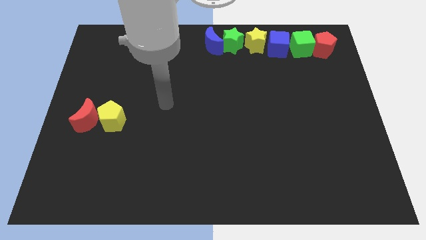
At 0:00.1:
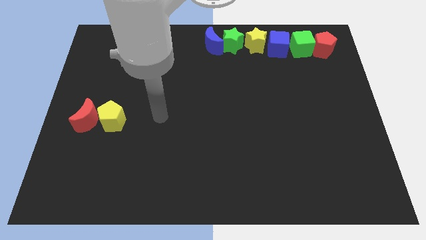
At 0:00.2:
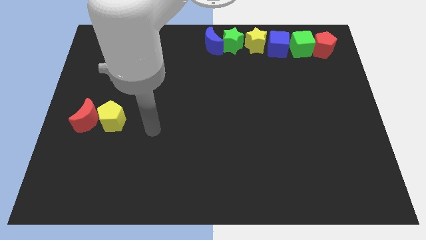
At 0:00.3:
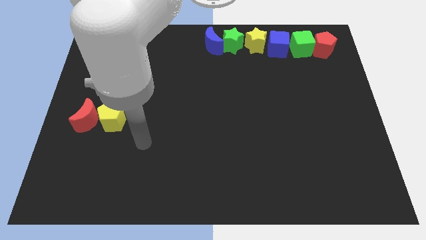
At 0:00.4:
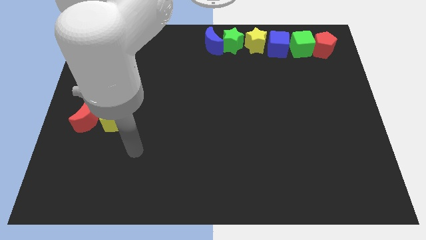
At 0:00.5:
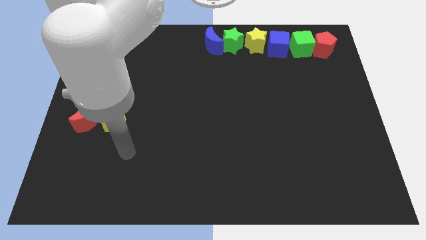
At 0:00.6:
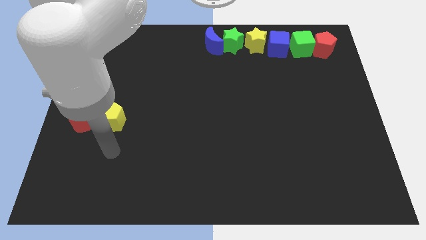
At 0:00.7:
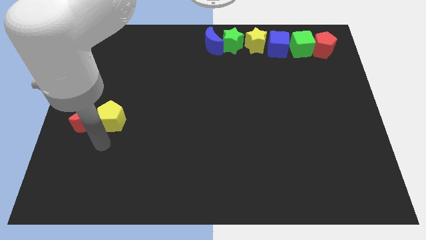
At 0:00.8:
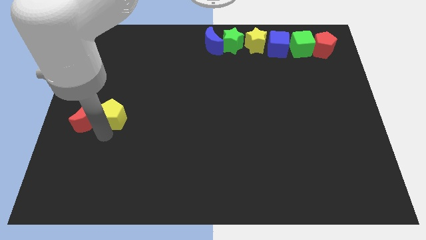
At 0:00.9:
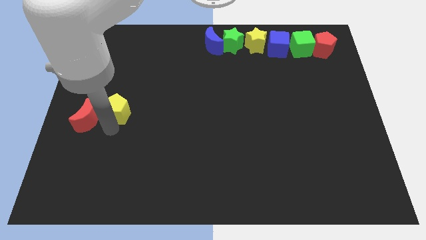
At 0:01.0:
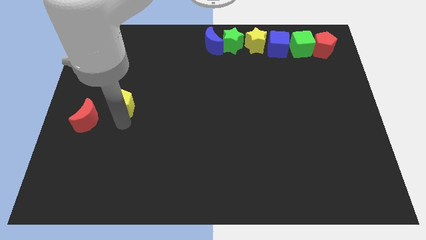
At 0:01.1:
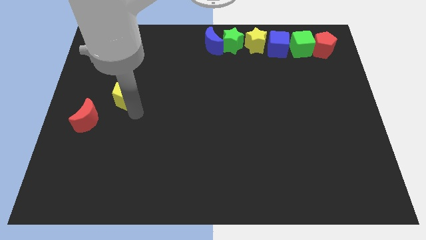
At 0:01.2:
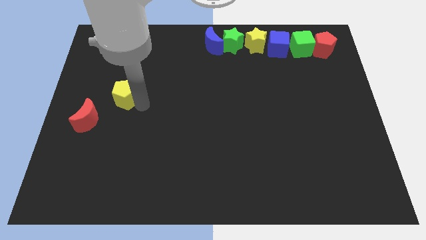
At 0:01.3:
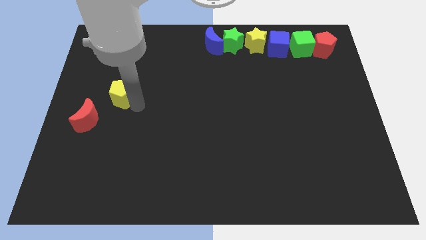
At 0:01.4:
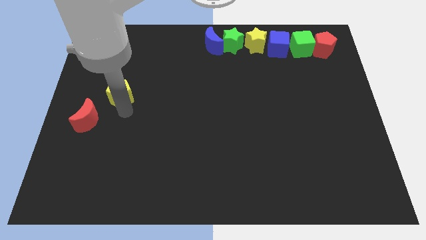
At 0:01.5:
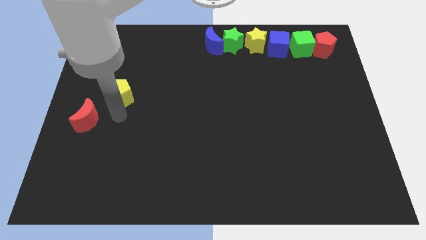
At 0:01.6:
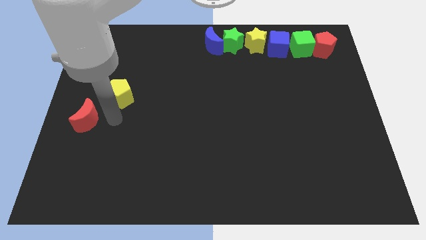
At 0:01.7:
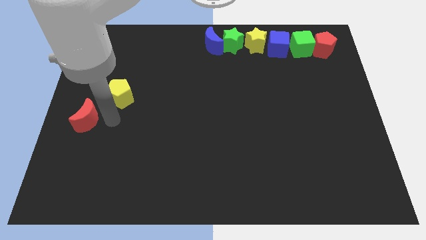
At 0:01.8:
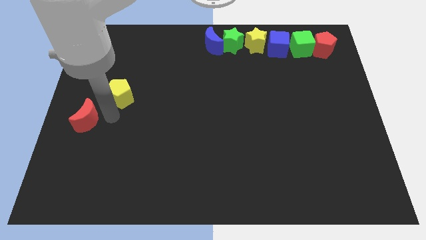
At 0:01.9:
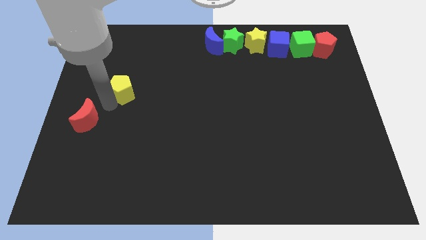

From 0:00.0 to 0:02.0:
separate the yellow pentagon from the red crescent

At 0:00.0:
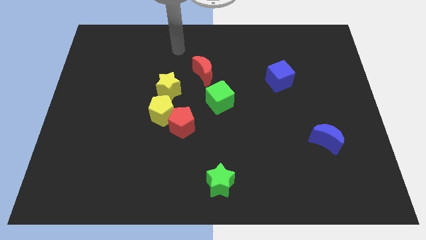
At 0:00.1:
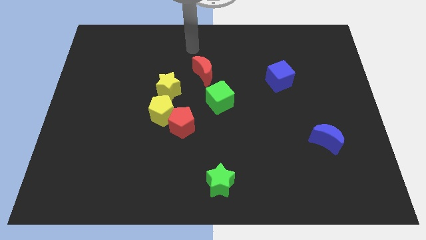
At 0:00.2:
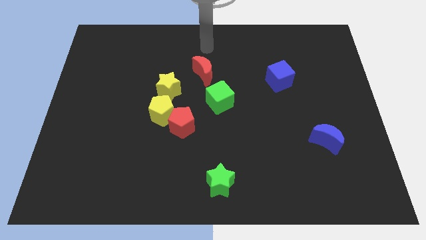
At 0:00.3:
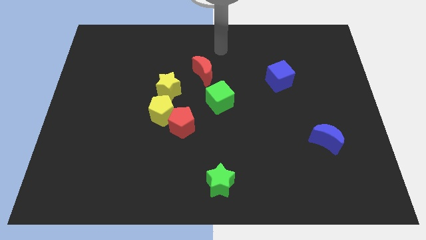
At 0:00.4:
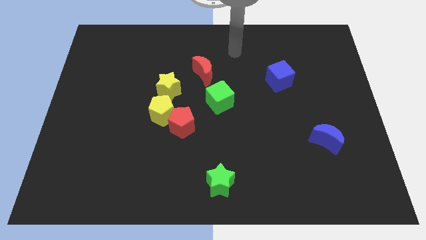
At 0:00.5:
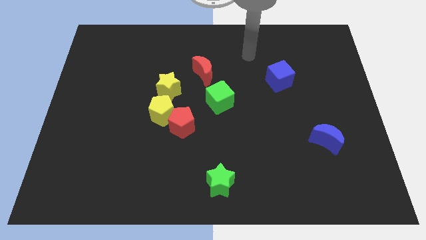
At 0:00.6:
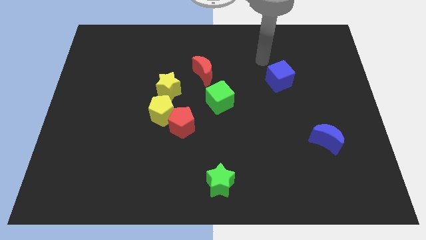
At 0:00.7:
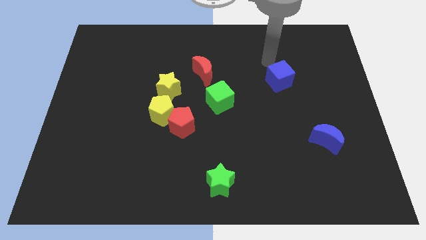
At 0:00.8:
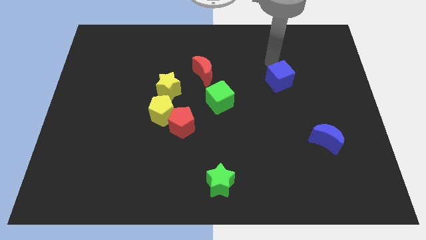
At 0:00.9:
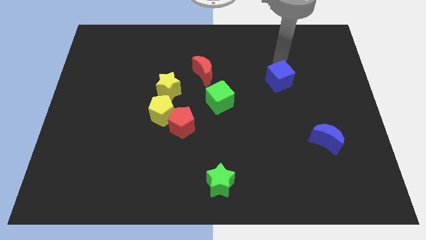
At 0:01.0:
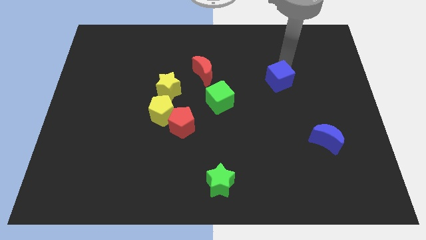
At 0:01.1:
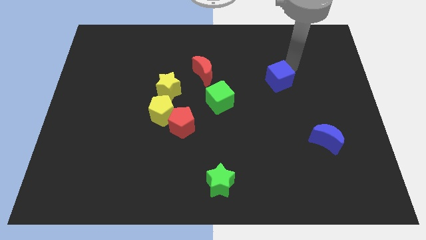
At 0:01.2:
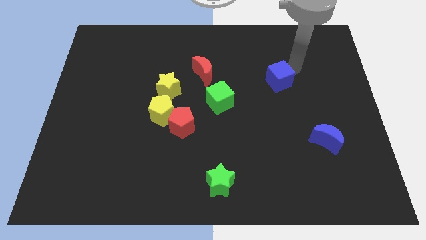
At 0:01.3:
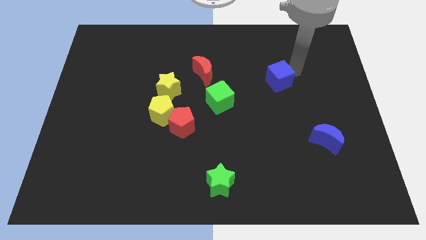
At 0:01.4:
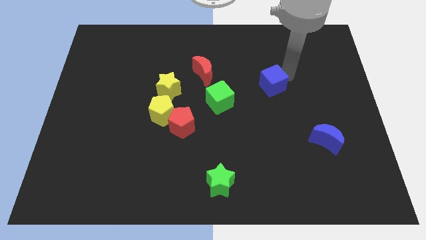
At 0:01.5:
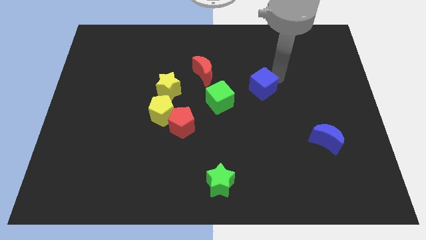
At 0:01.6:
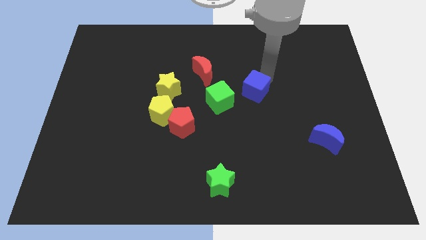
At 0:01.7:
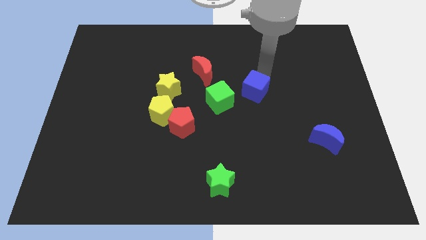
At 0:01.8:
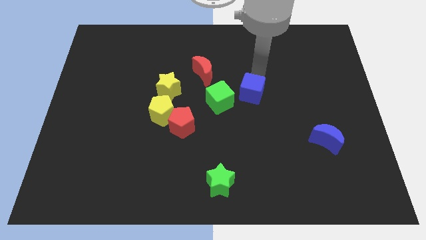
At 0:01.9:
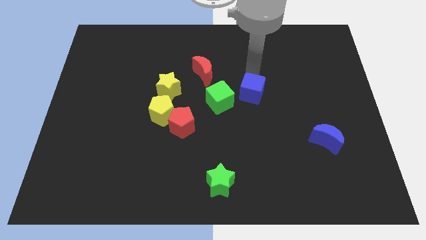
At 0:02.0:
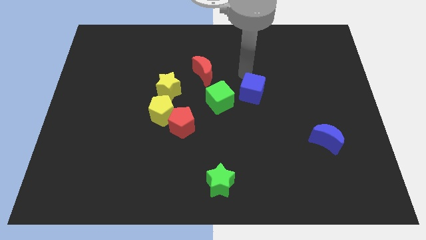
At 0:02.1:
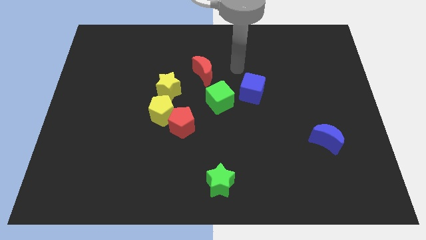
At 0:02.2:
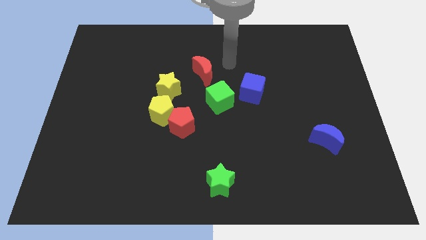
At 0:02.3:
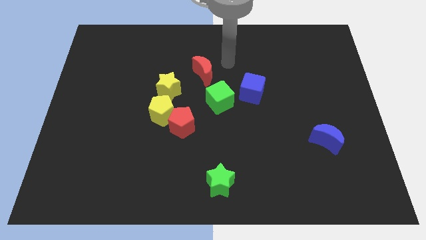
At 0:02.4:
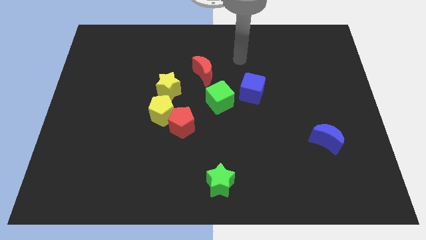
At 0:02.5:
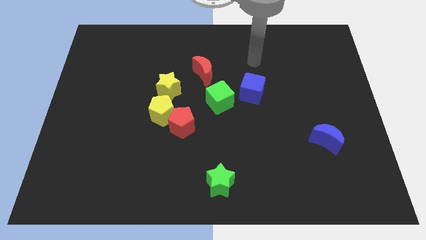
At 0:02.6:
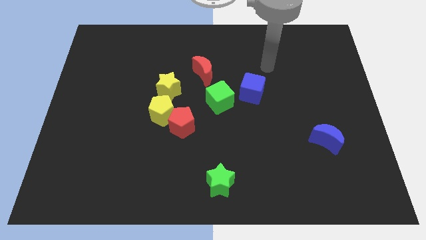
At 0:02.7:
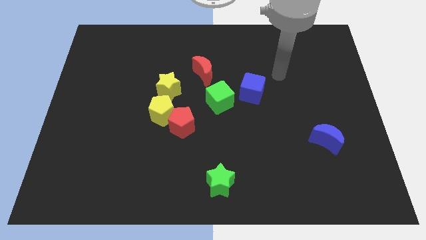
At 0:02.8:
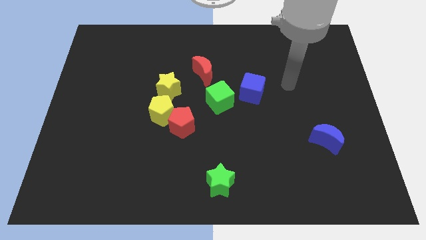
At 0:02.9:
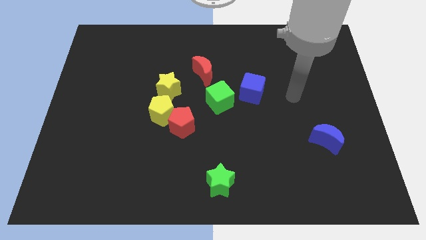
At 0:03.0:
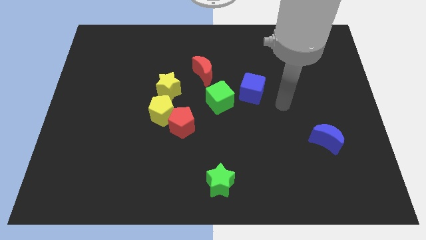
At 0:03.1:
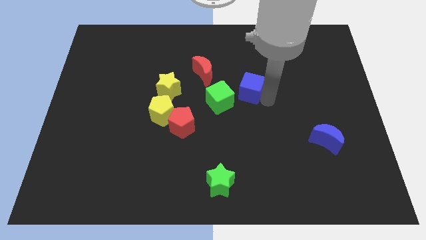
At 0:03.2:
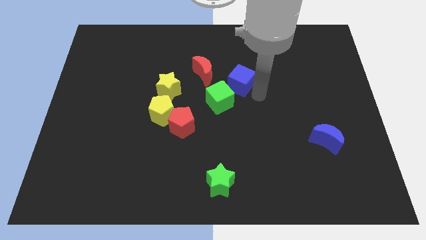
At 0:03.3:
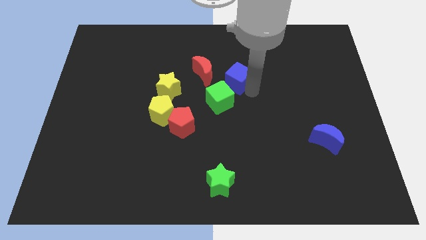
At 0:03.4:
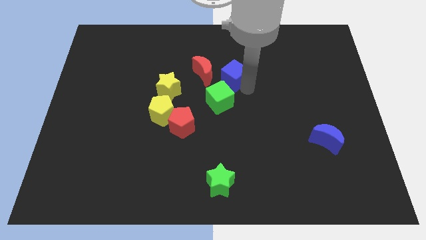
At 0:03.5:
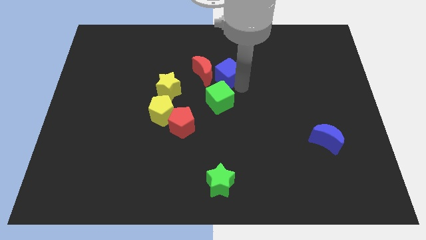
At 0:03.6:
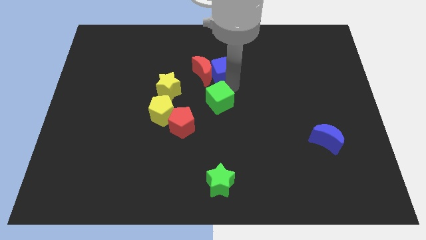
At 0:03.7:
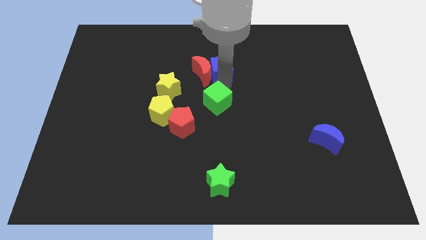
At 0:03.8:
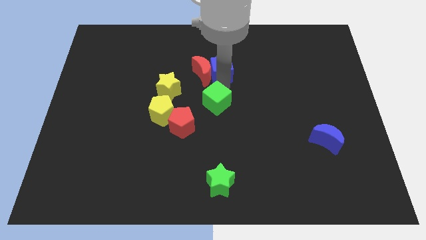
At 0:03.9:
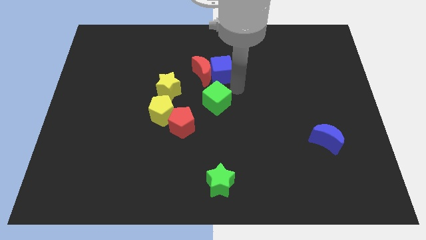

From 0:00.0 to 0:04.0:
place the blue cube above the green cube

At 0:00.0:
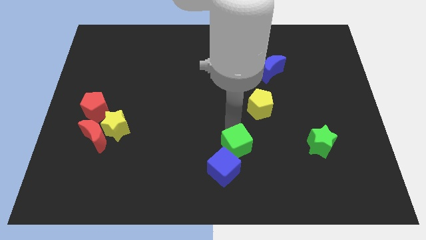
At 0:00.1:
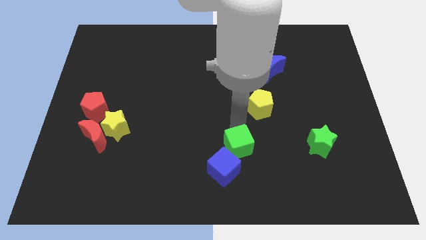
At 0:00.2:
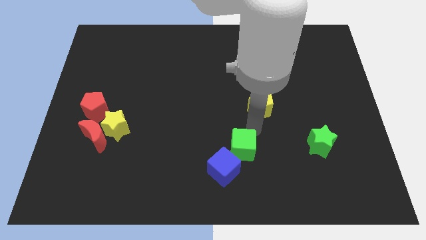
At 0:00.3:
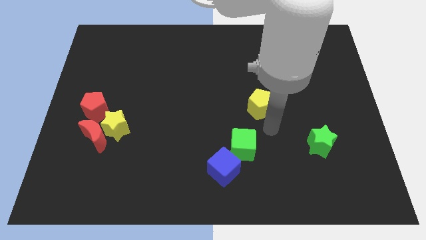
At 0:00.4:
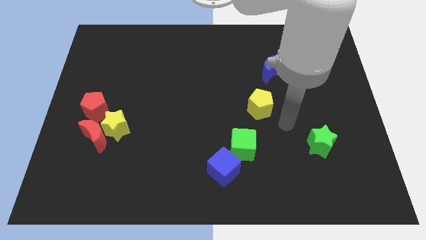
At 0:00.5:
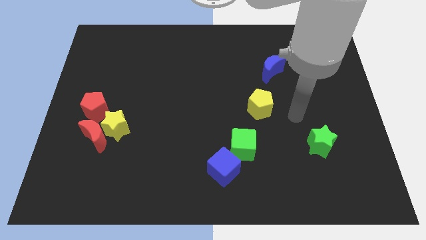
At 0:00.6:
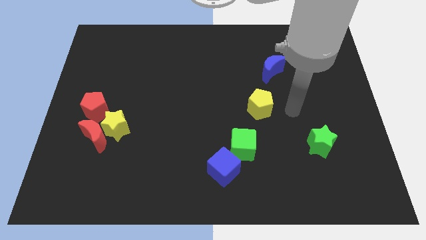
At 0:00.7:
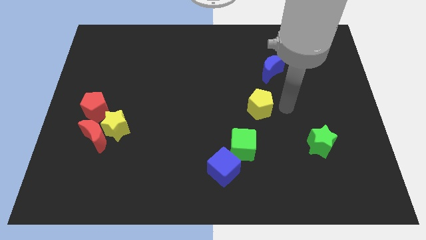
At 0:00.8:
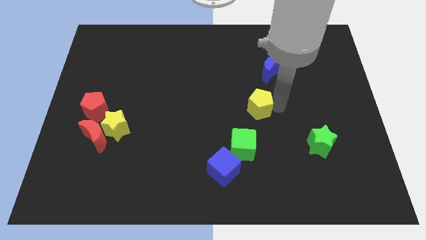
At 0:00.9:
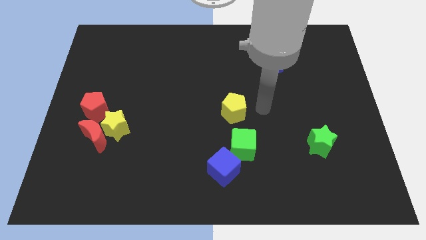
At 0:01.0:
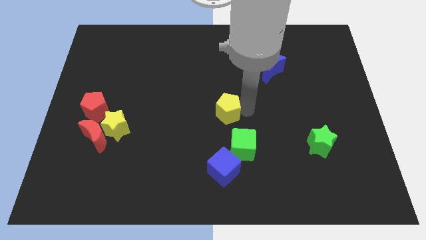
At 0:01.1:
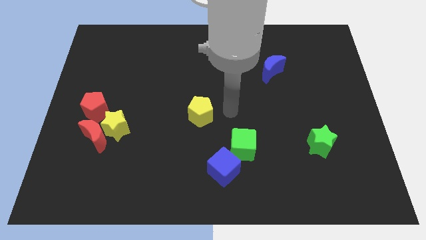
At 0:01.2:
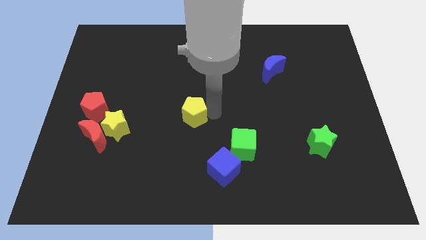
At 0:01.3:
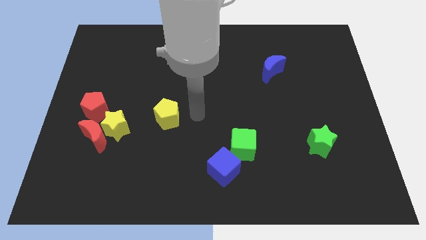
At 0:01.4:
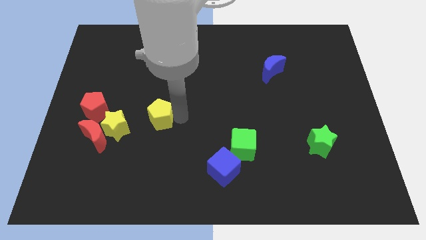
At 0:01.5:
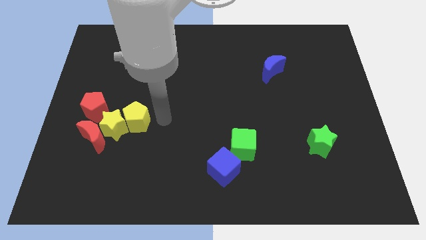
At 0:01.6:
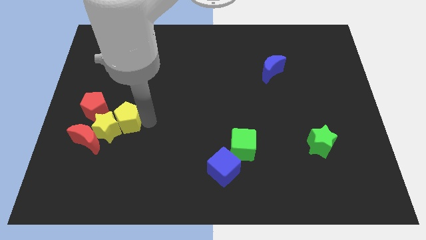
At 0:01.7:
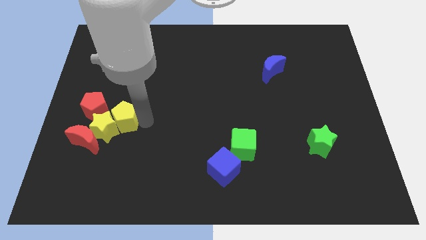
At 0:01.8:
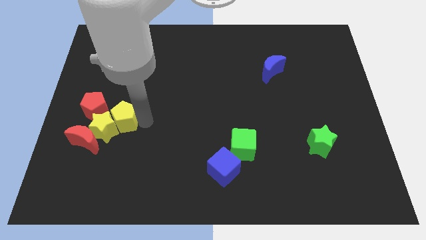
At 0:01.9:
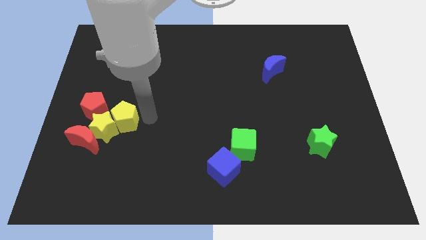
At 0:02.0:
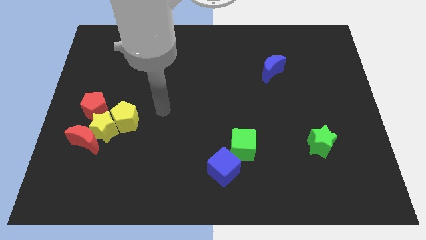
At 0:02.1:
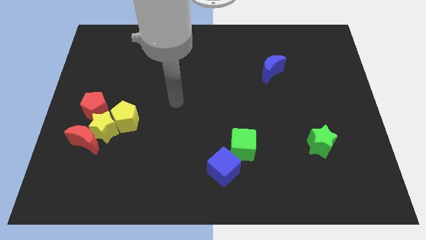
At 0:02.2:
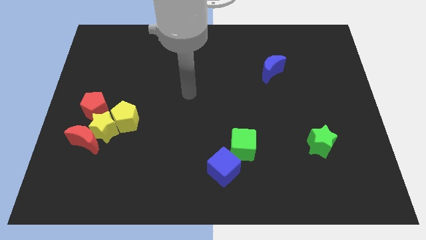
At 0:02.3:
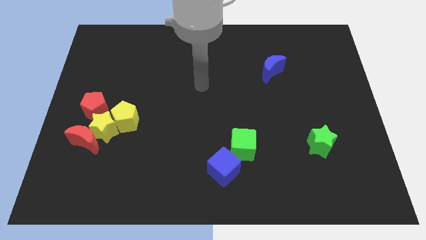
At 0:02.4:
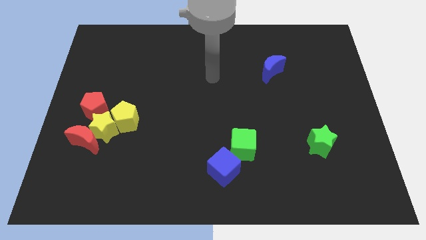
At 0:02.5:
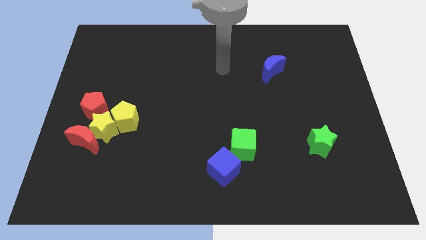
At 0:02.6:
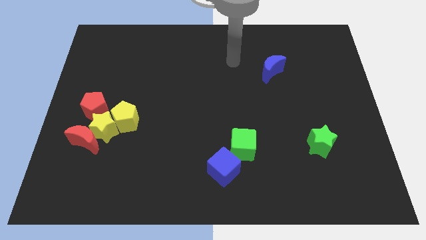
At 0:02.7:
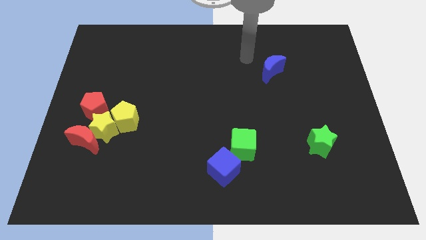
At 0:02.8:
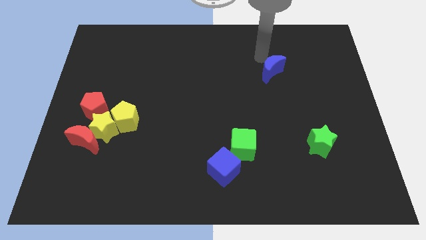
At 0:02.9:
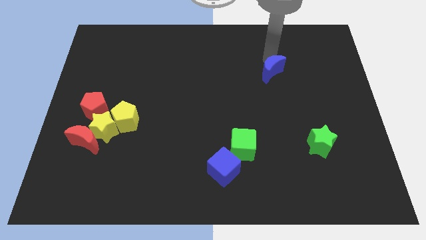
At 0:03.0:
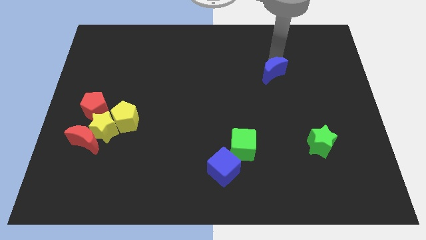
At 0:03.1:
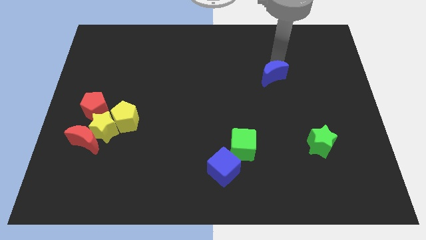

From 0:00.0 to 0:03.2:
move the yellow pentagon into the yellow star
